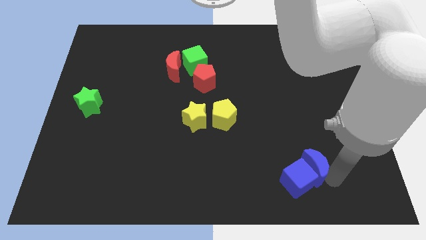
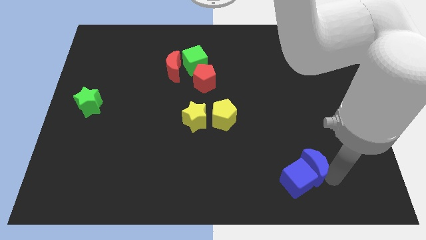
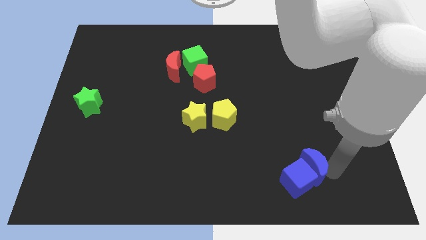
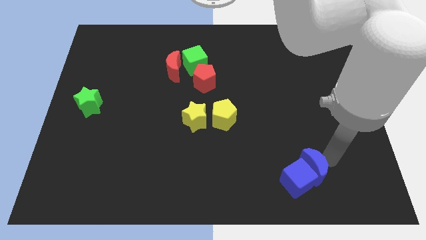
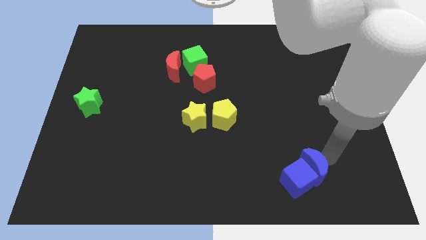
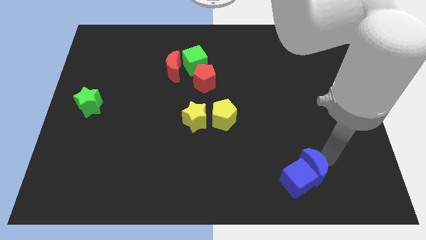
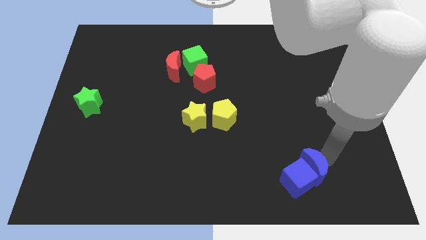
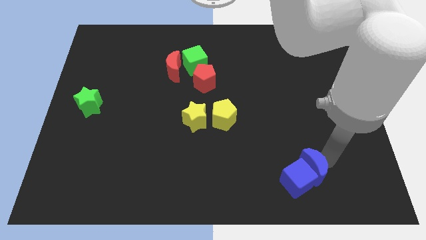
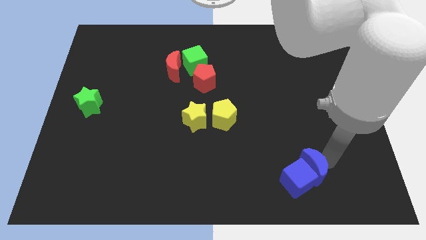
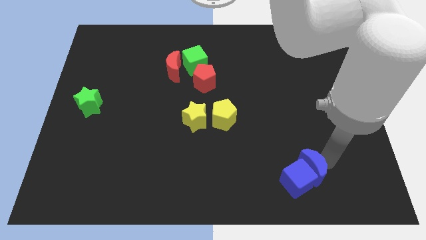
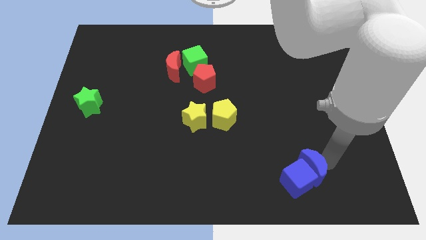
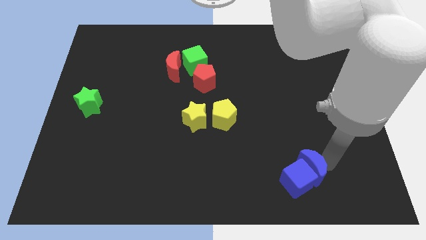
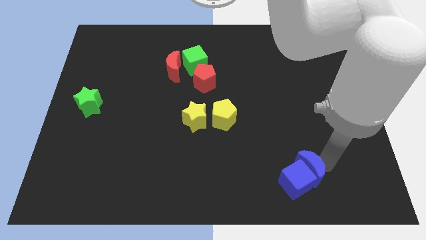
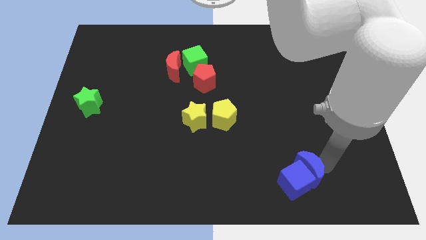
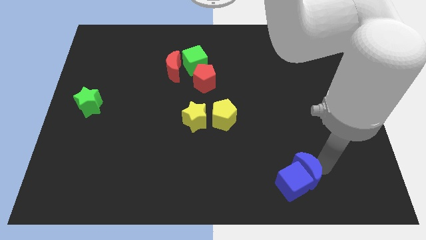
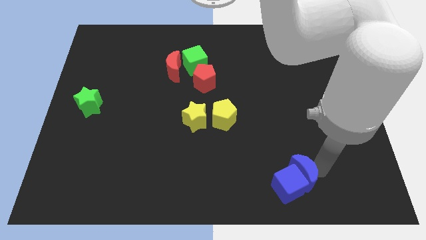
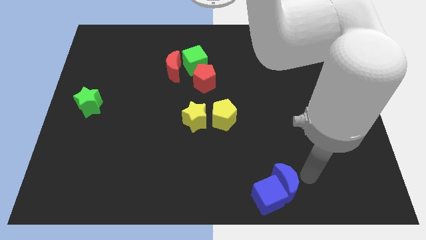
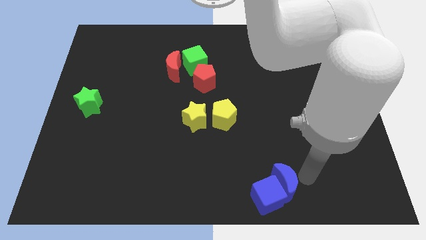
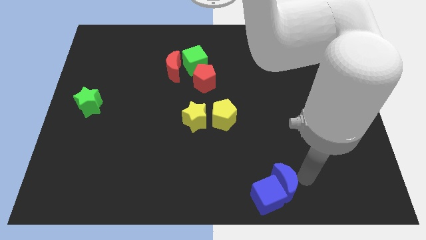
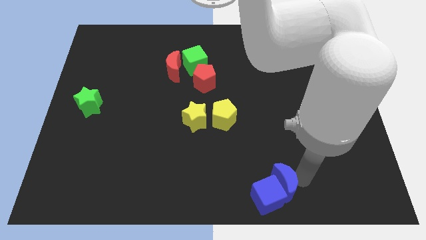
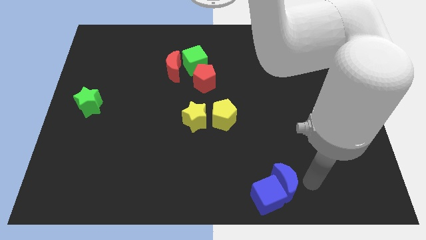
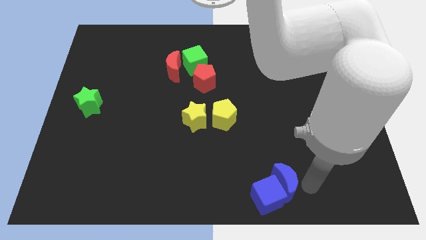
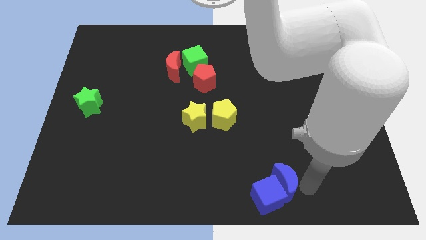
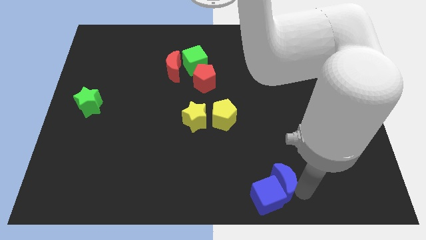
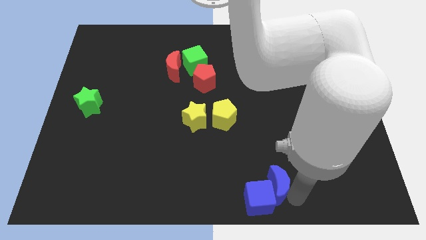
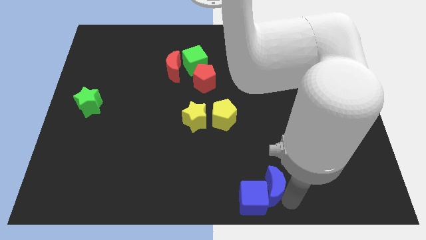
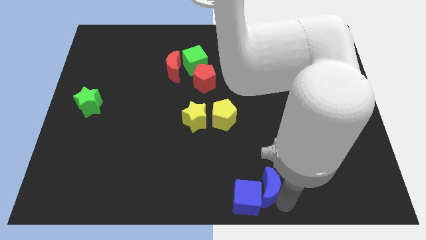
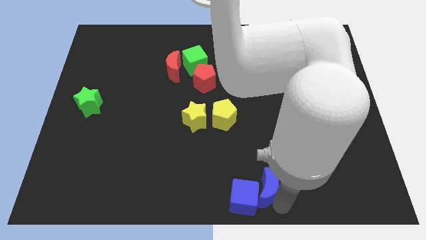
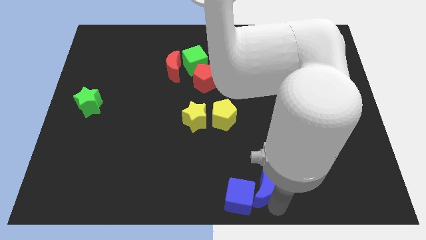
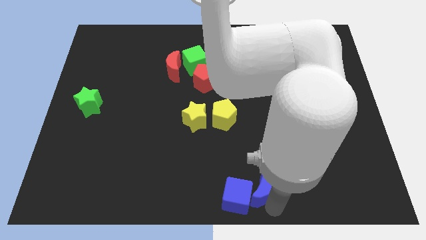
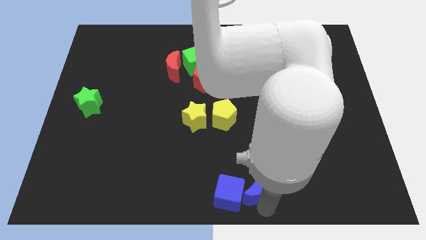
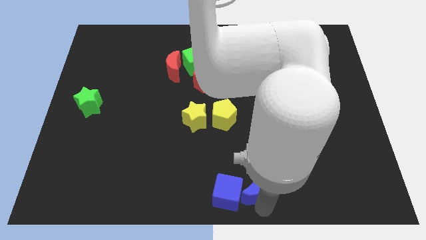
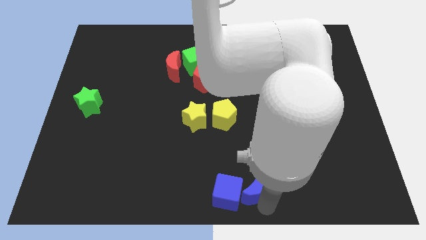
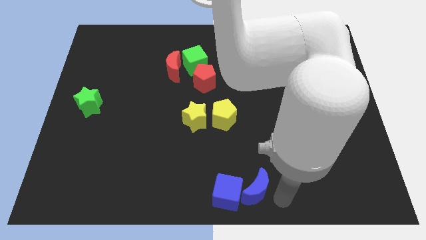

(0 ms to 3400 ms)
move blue blocks into the bottom middle

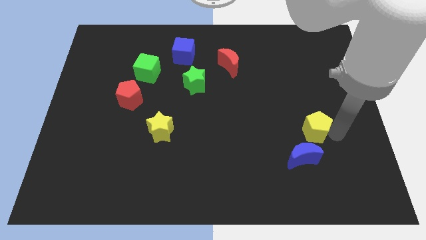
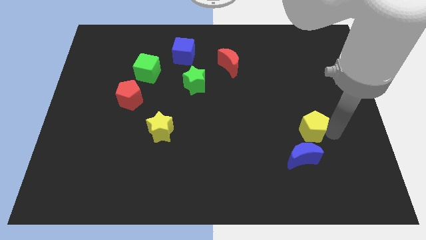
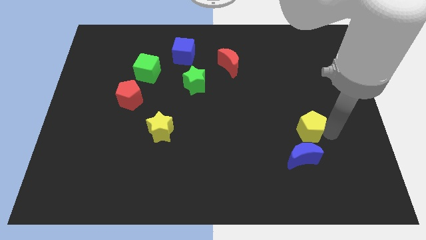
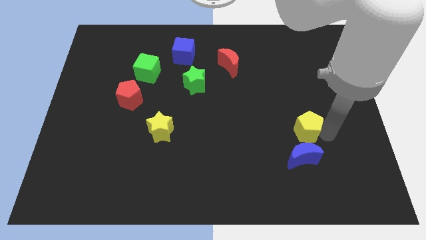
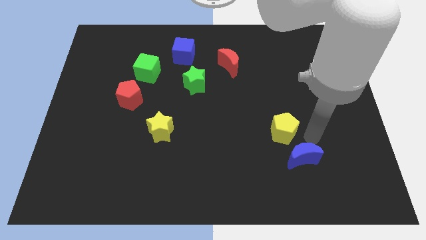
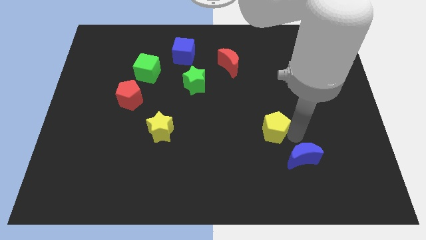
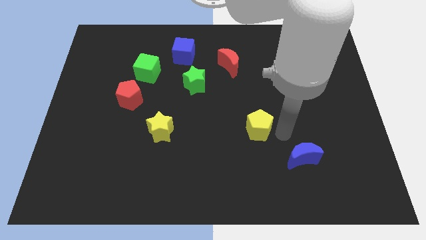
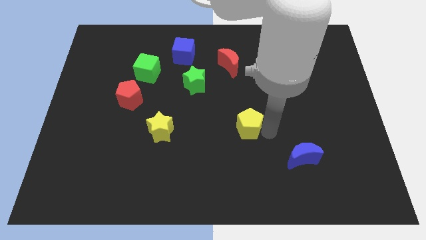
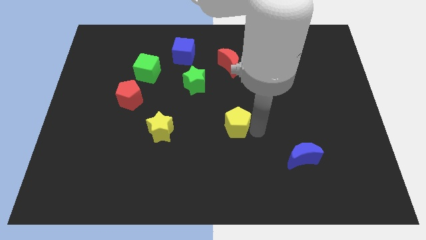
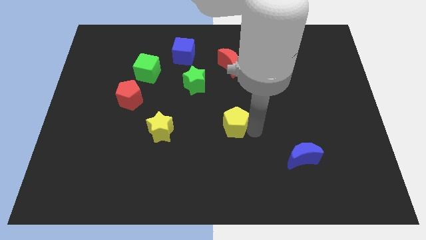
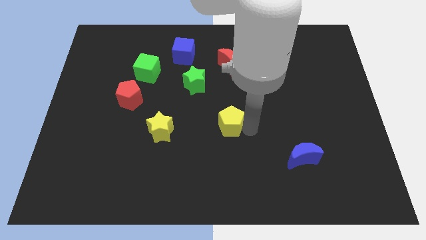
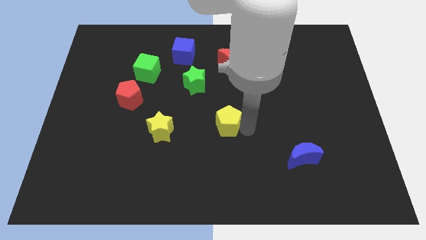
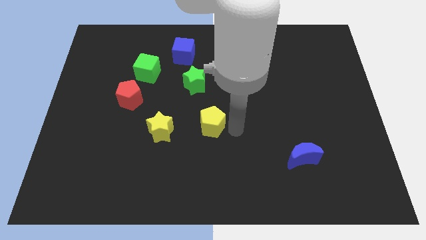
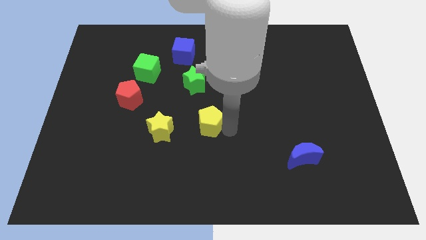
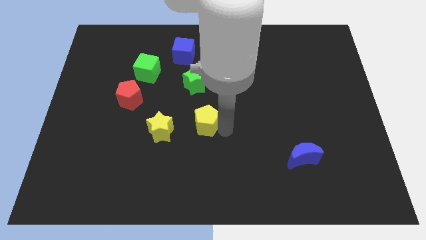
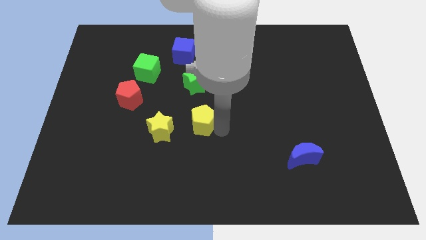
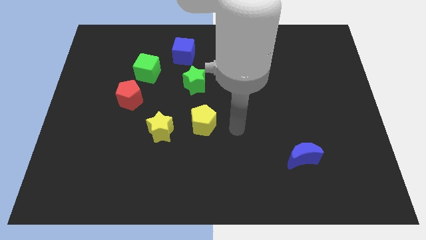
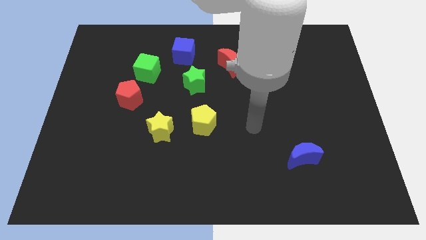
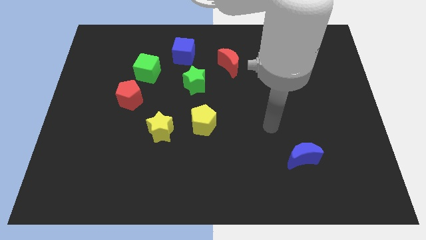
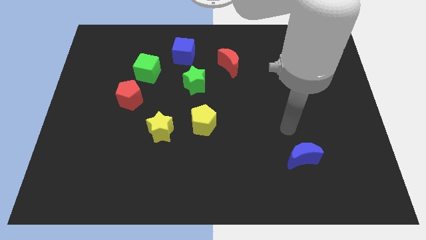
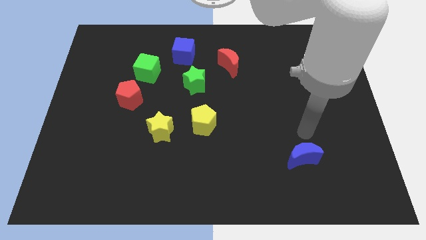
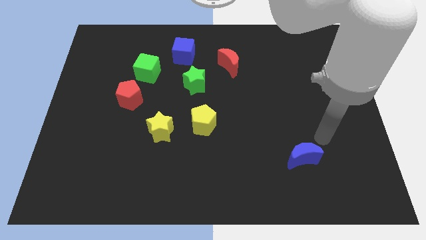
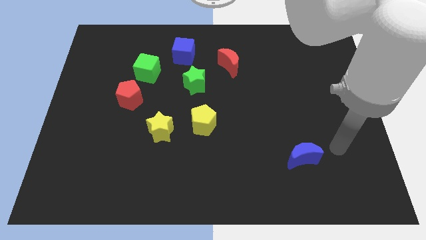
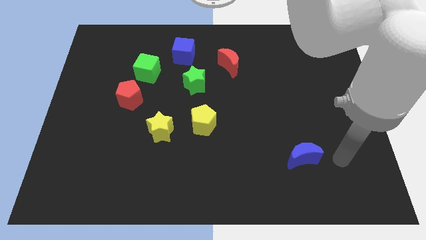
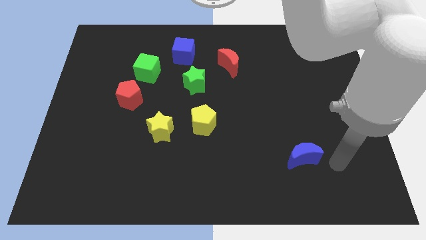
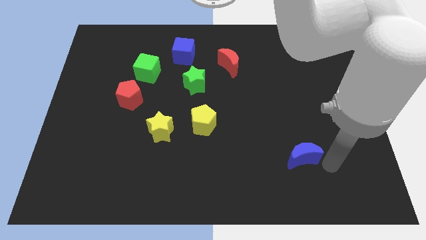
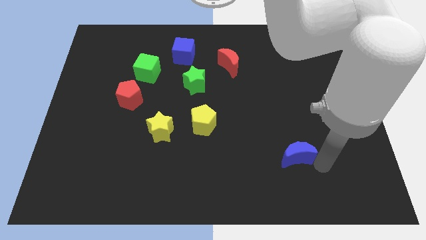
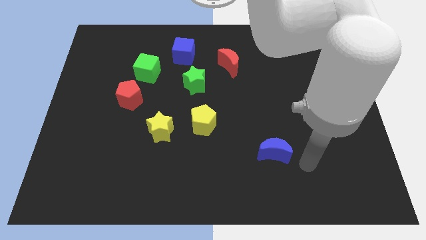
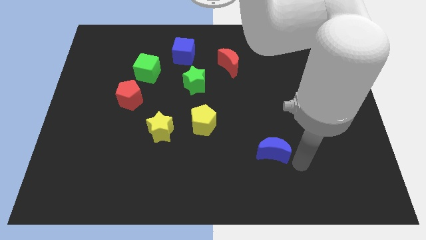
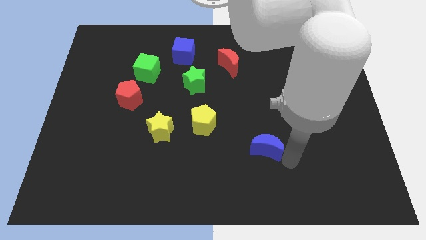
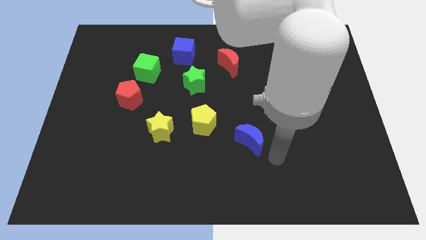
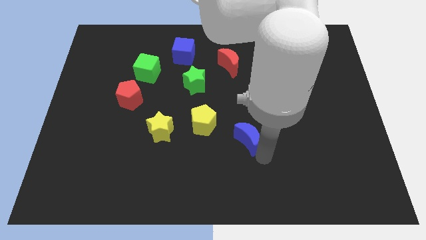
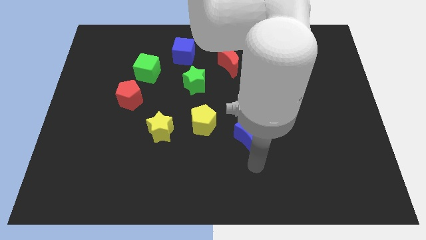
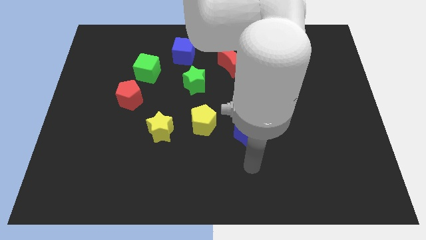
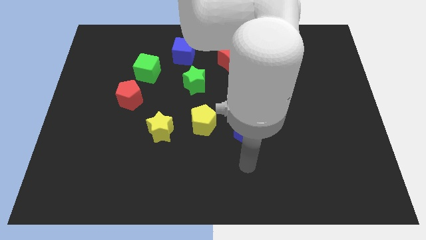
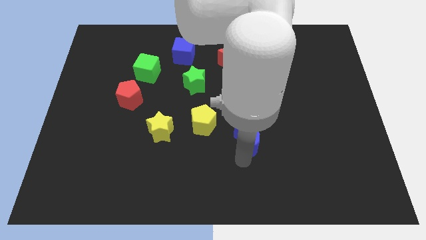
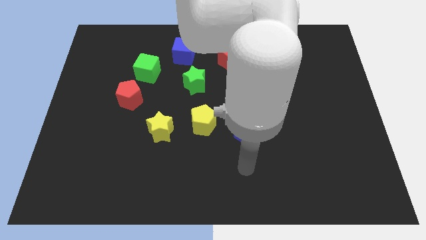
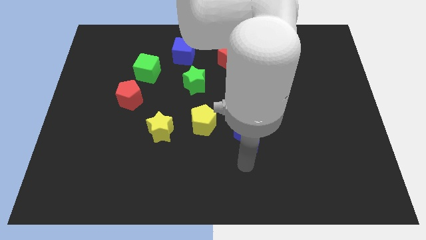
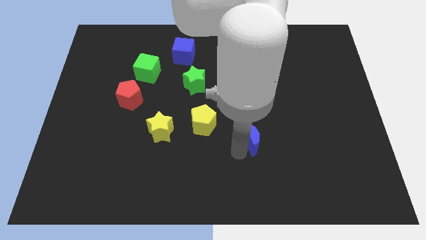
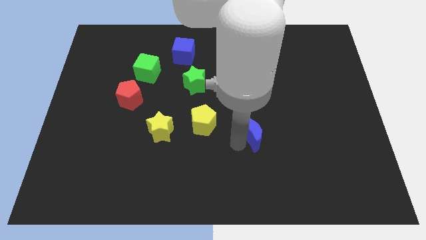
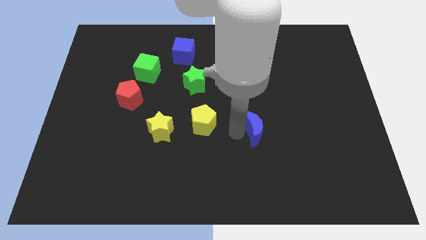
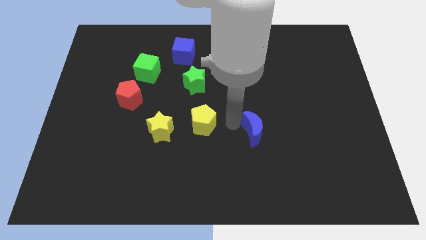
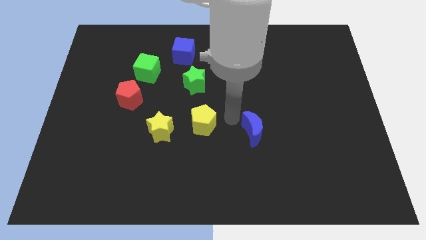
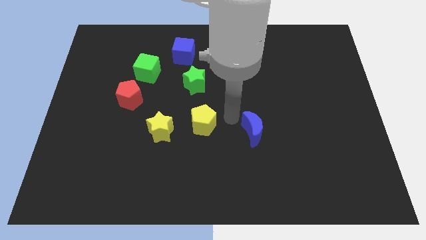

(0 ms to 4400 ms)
move the blue moon to the left side of yellow pentagon

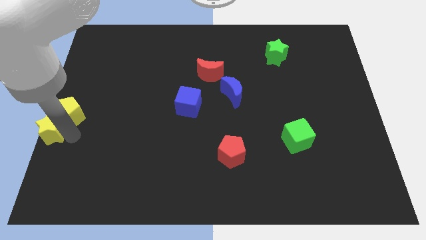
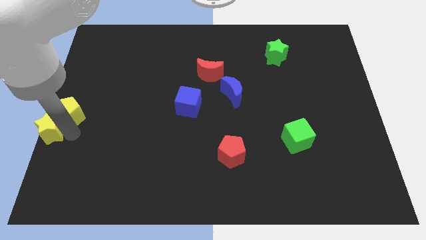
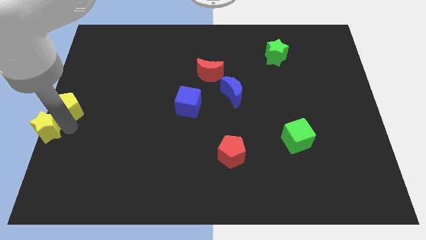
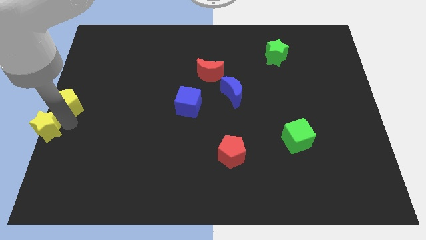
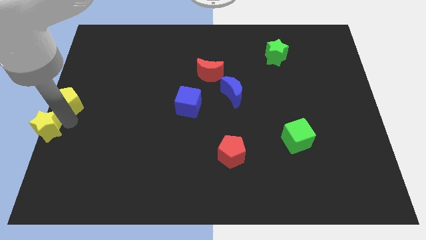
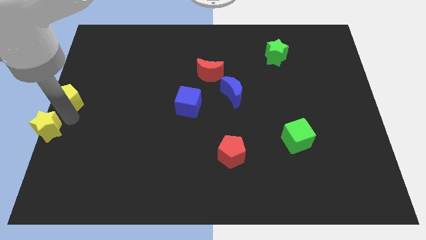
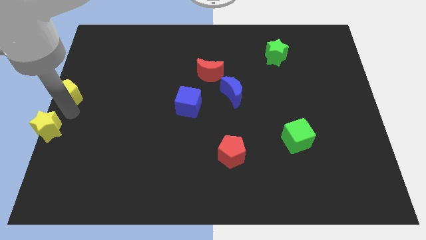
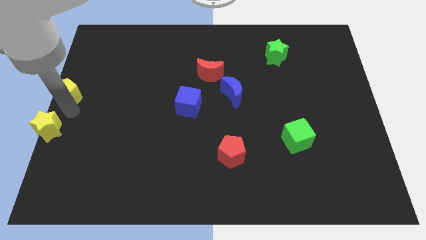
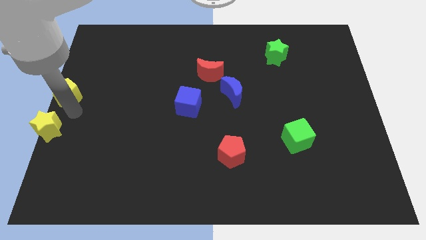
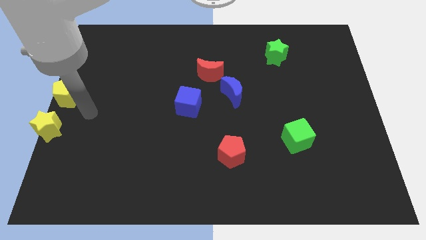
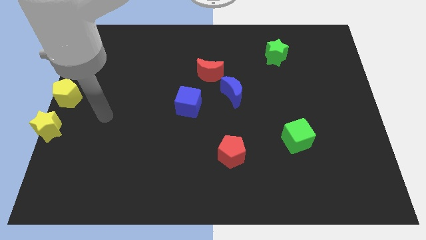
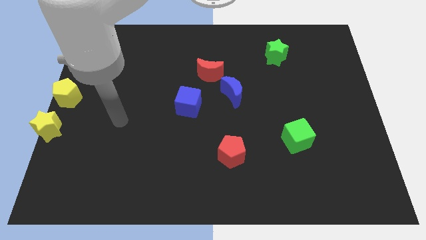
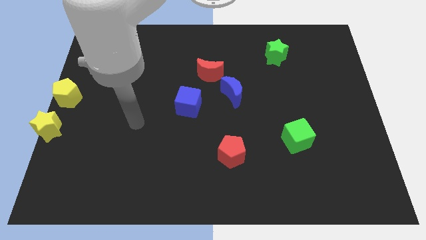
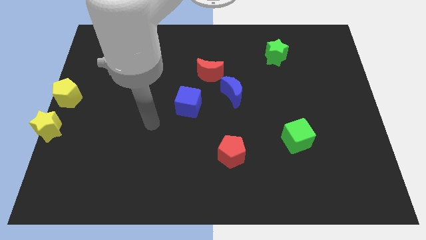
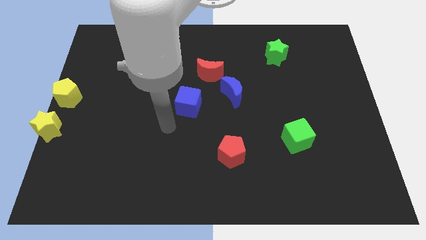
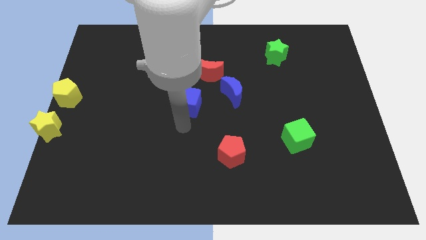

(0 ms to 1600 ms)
separate the yellow pentagon from the yellow star
